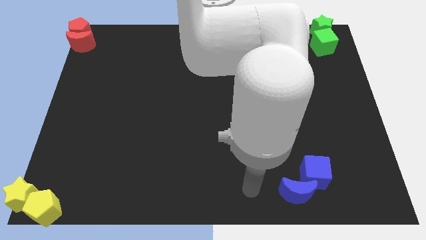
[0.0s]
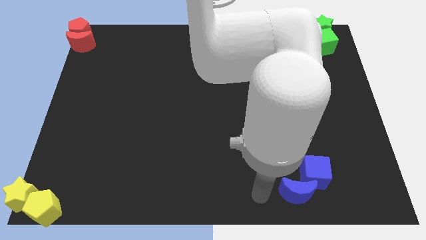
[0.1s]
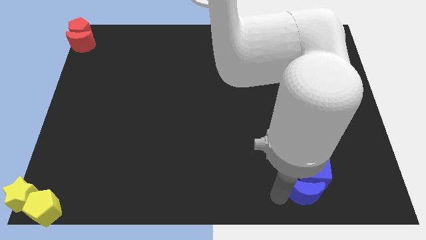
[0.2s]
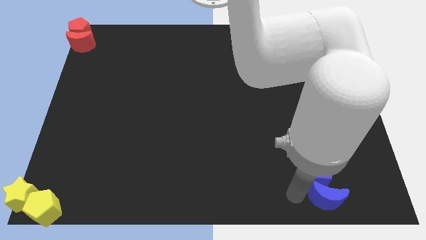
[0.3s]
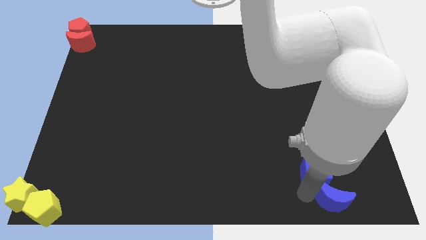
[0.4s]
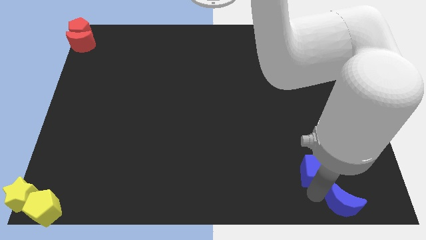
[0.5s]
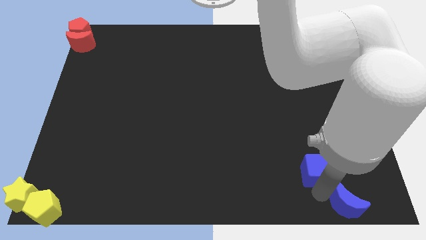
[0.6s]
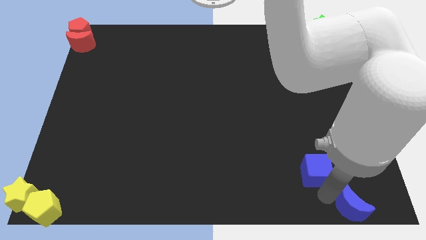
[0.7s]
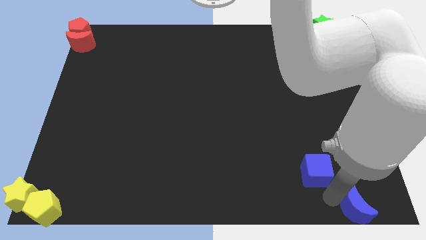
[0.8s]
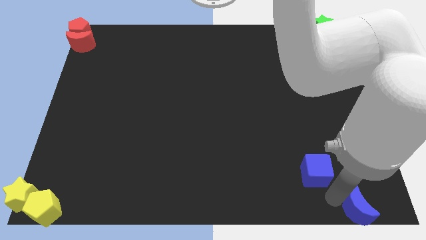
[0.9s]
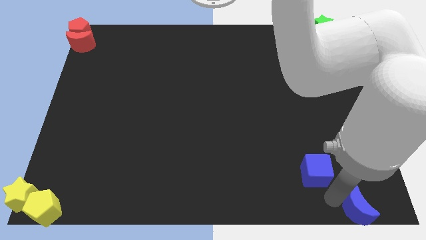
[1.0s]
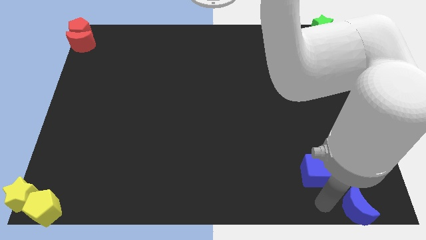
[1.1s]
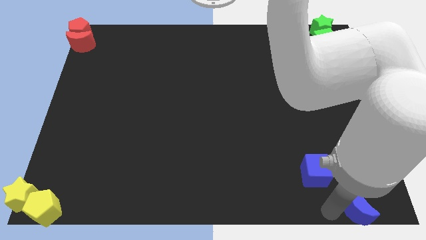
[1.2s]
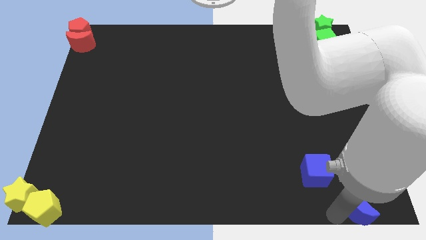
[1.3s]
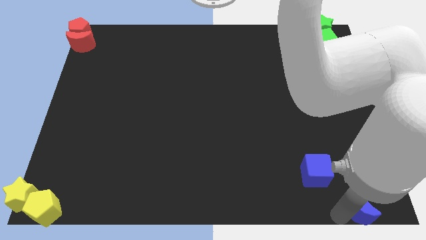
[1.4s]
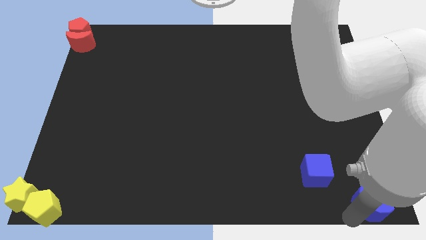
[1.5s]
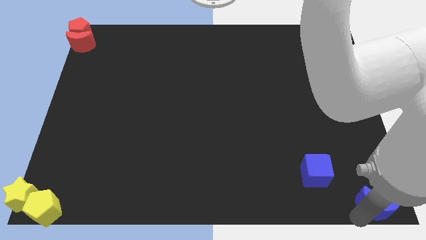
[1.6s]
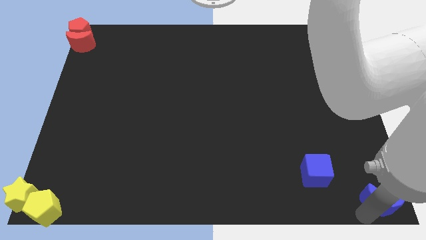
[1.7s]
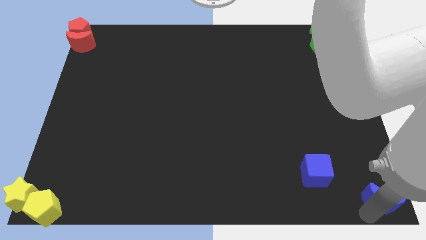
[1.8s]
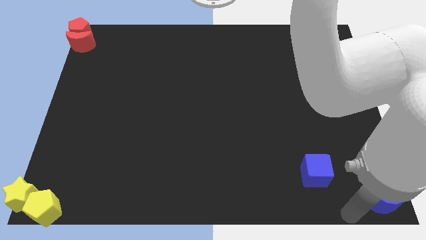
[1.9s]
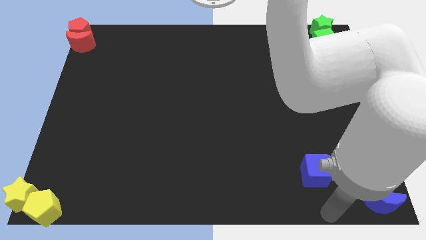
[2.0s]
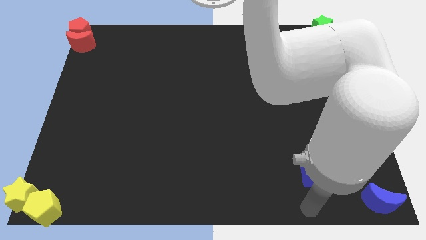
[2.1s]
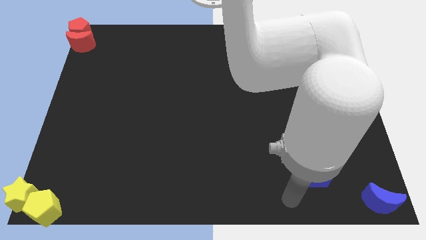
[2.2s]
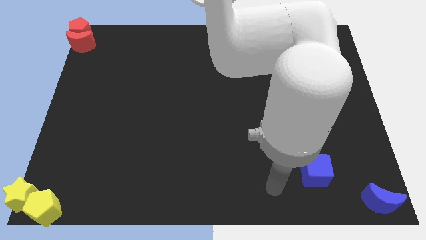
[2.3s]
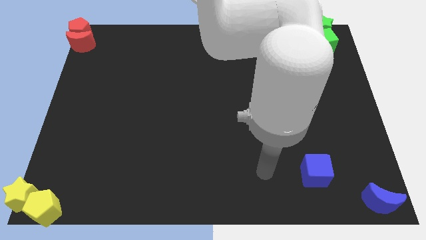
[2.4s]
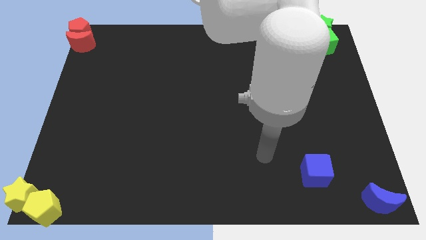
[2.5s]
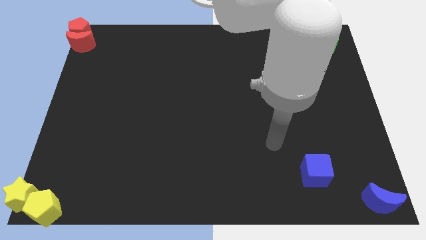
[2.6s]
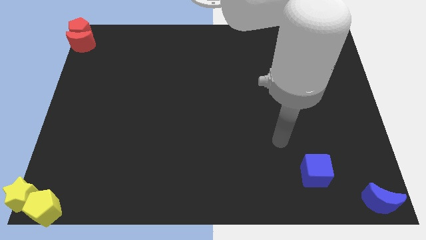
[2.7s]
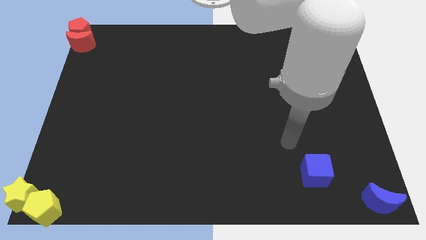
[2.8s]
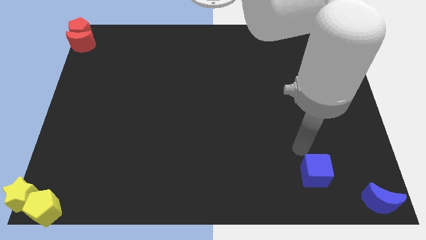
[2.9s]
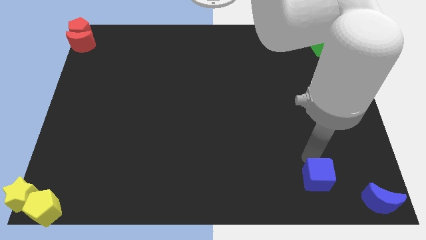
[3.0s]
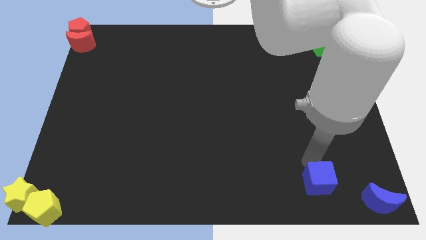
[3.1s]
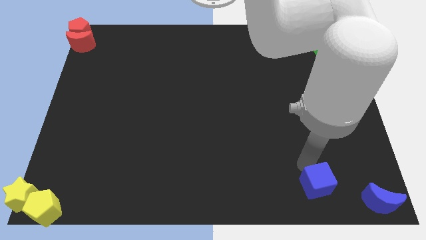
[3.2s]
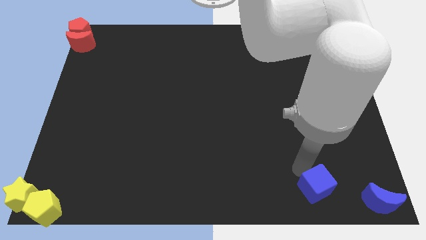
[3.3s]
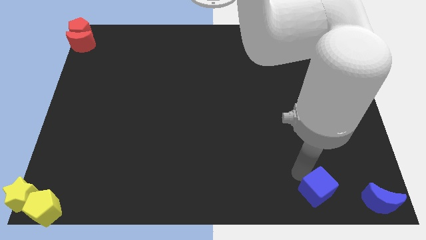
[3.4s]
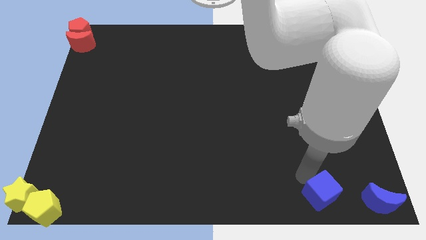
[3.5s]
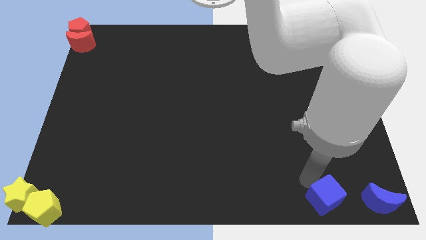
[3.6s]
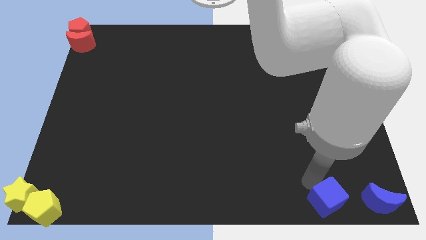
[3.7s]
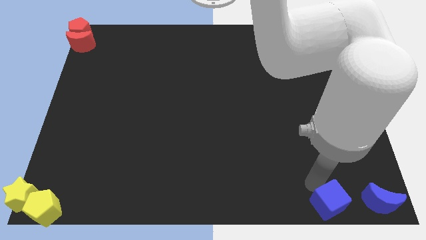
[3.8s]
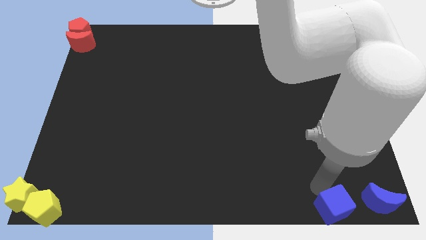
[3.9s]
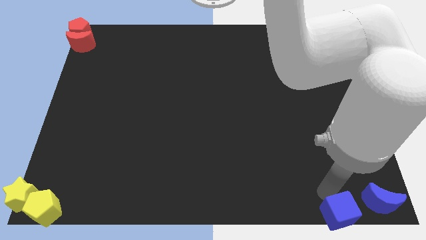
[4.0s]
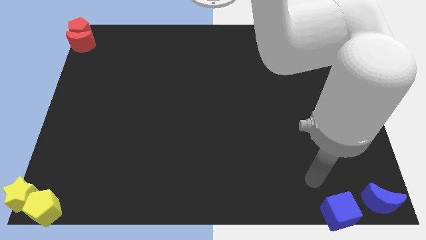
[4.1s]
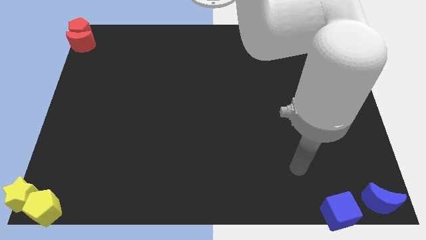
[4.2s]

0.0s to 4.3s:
move the blue cube and blue moon to the bottom right of the board

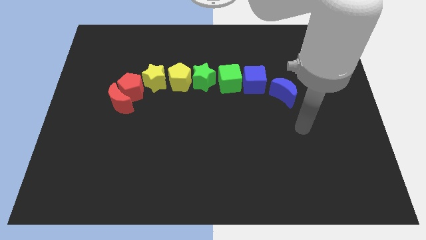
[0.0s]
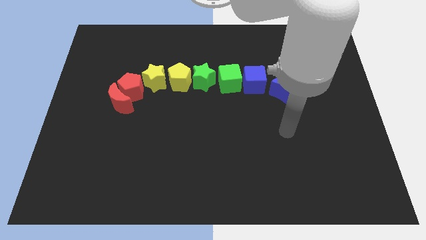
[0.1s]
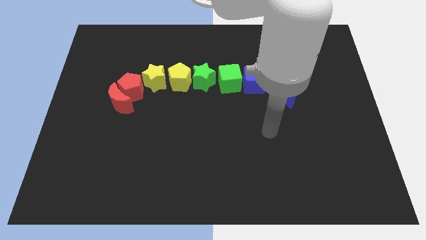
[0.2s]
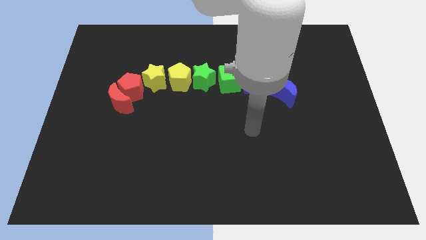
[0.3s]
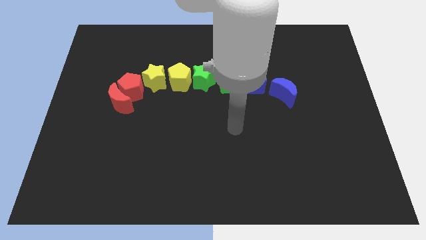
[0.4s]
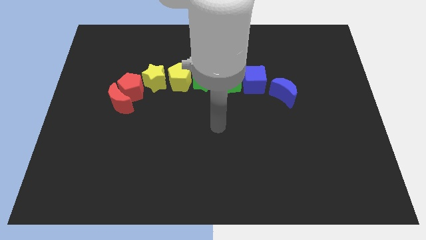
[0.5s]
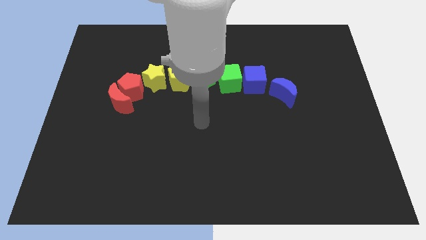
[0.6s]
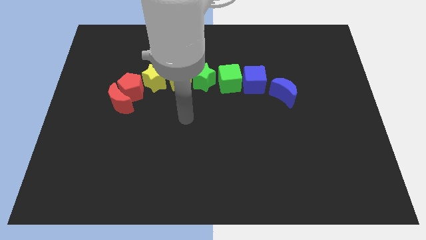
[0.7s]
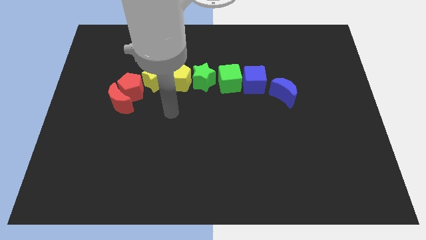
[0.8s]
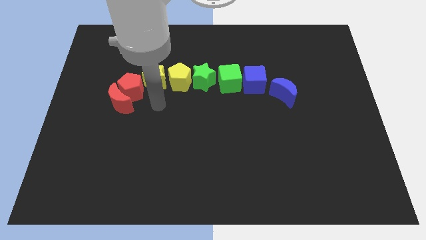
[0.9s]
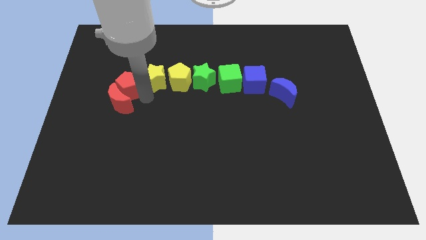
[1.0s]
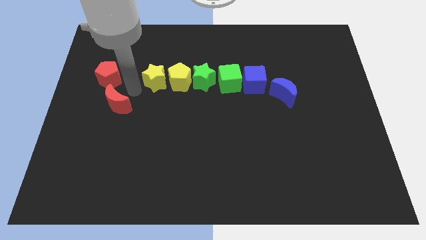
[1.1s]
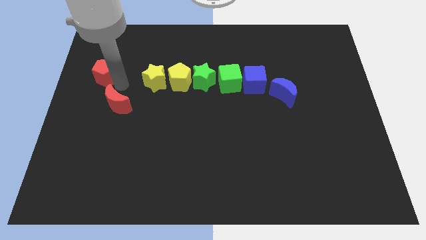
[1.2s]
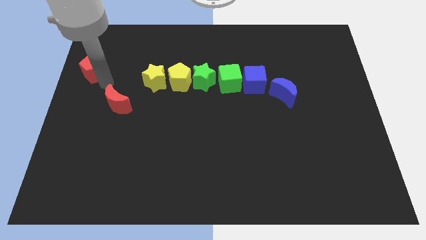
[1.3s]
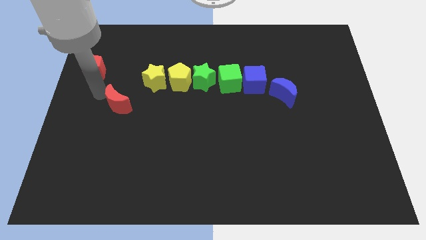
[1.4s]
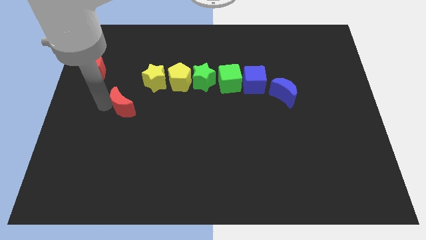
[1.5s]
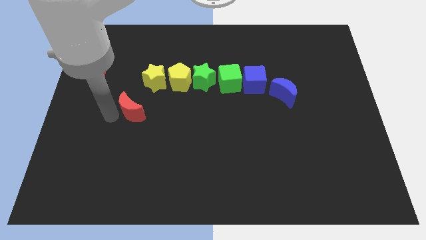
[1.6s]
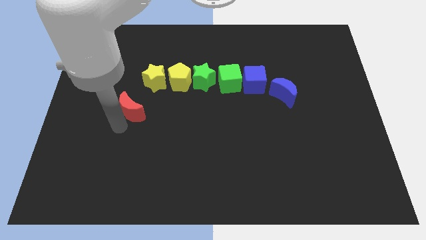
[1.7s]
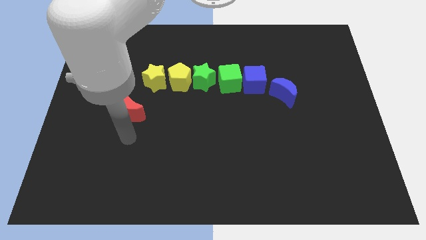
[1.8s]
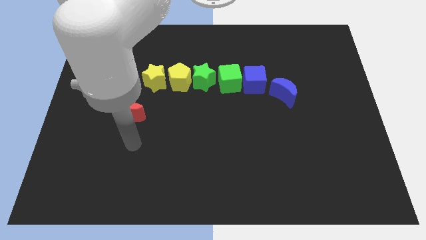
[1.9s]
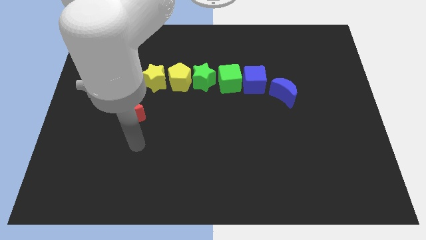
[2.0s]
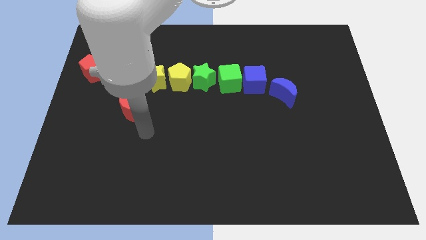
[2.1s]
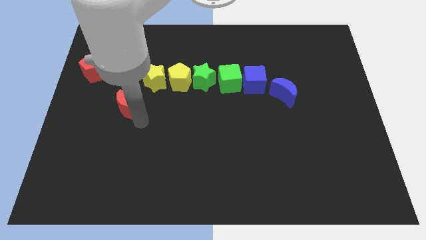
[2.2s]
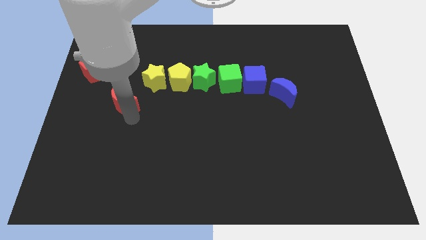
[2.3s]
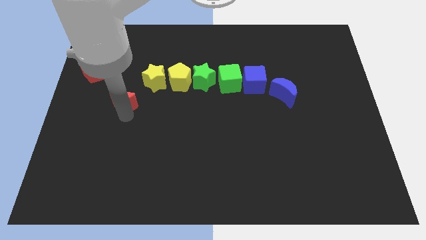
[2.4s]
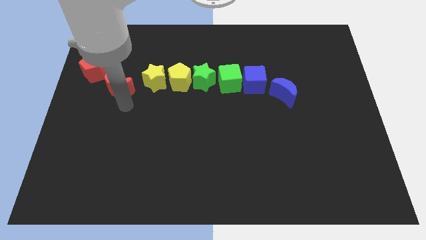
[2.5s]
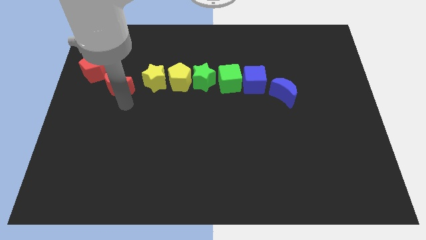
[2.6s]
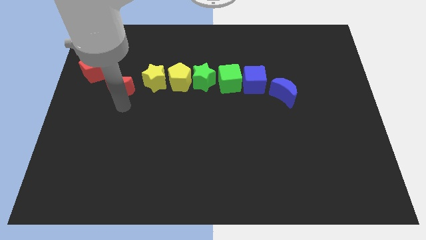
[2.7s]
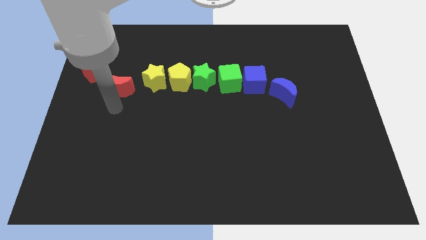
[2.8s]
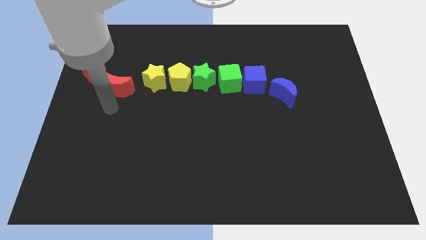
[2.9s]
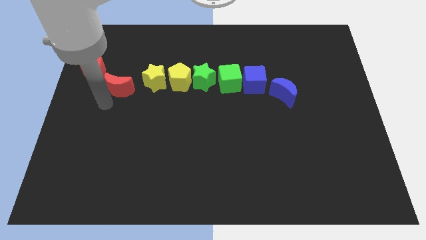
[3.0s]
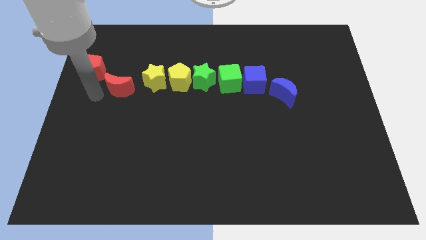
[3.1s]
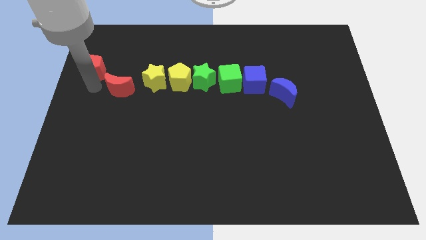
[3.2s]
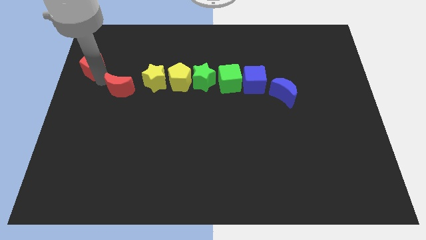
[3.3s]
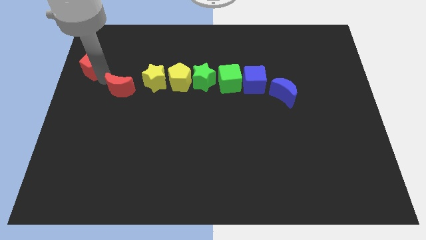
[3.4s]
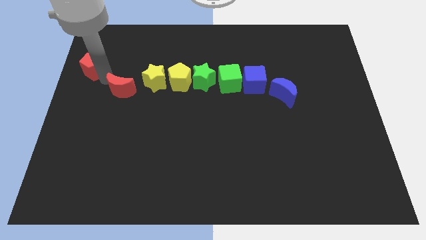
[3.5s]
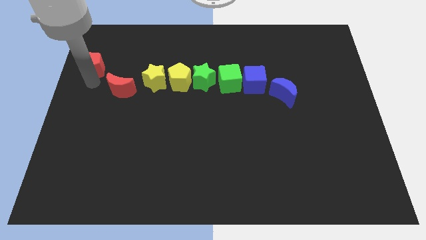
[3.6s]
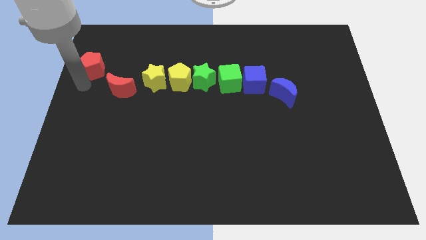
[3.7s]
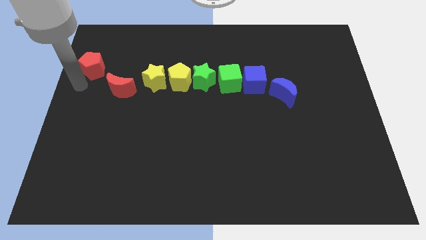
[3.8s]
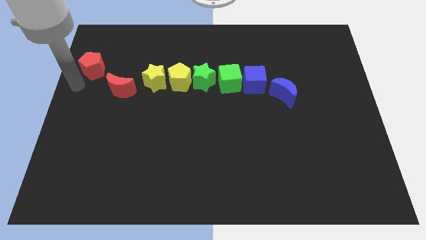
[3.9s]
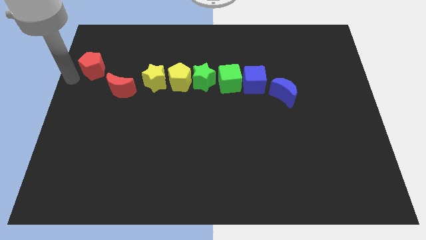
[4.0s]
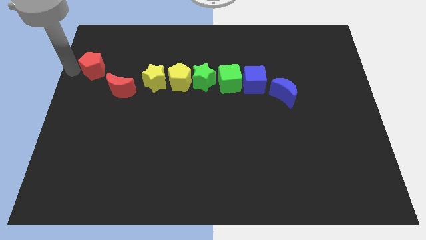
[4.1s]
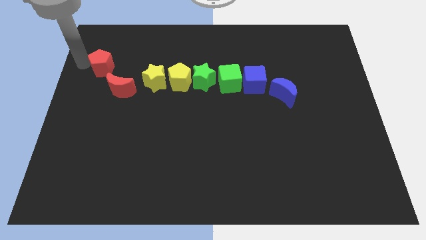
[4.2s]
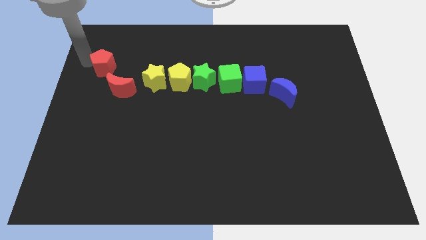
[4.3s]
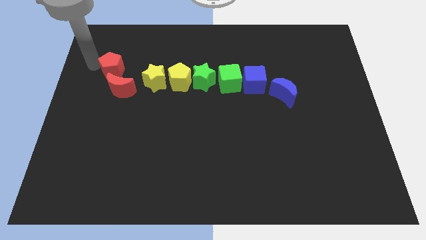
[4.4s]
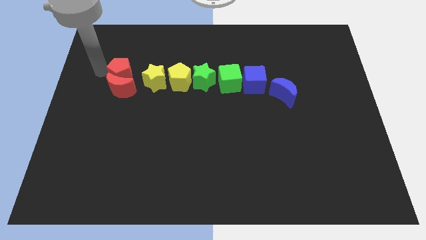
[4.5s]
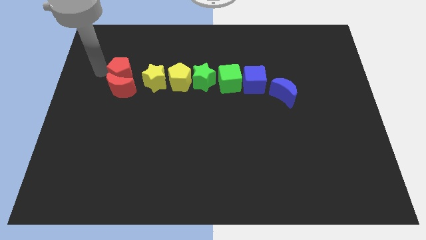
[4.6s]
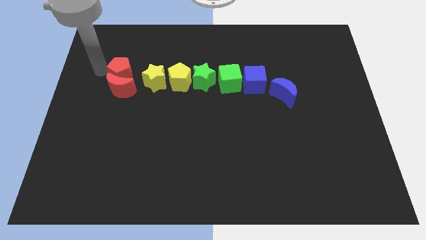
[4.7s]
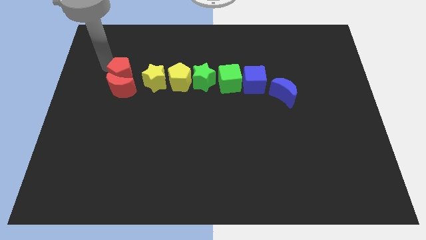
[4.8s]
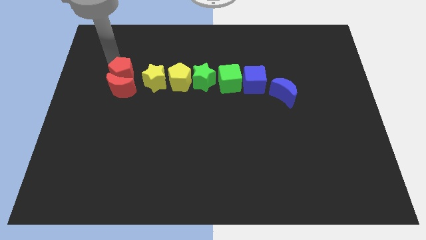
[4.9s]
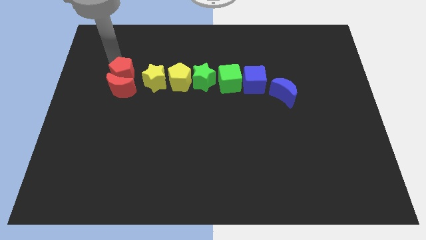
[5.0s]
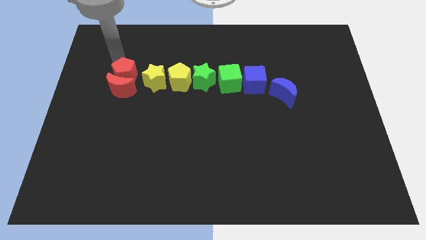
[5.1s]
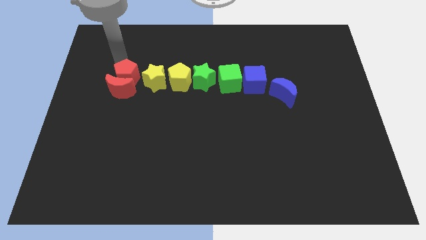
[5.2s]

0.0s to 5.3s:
adjust the red blocks at the left side of the yellow star
